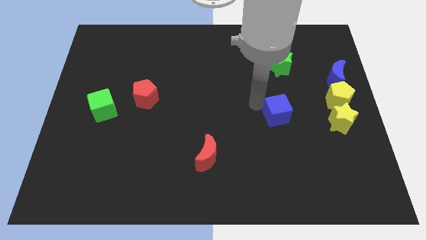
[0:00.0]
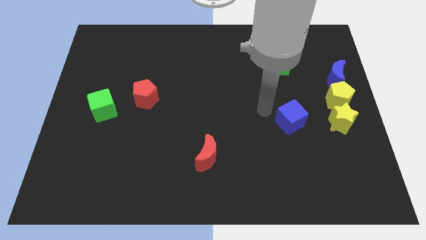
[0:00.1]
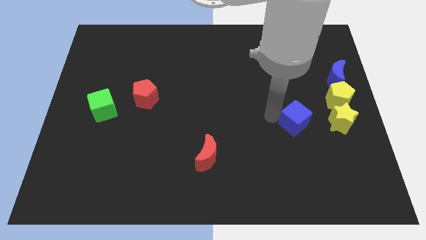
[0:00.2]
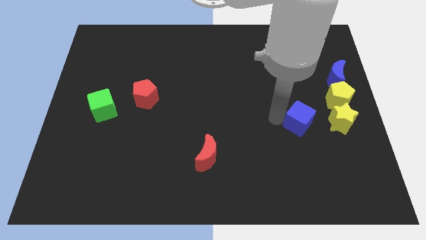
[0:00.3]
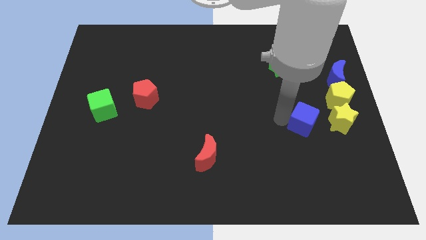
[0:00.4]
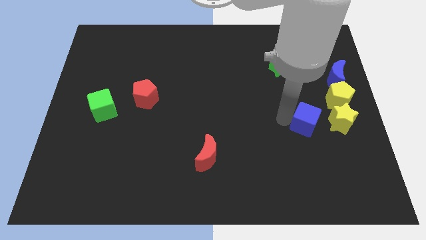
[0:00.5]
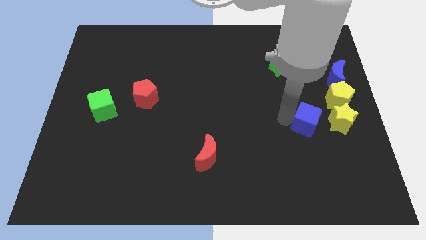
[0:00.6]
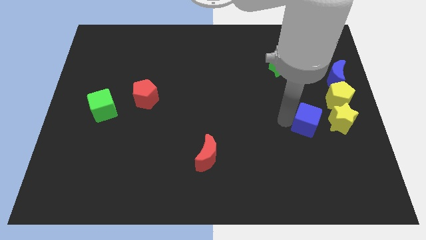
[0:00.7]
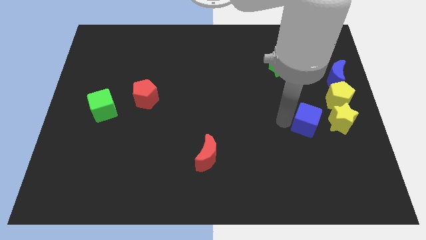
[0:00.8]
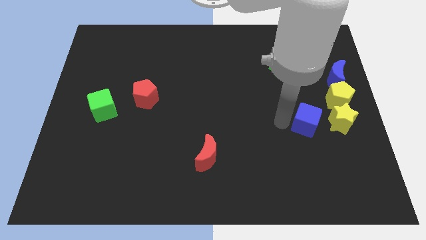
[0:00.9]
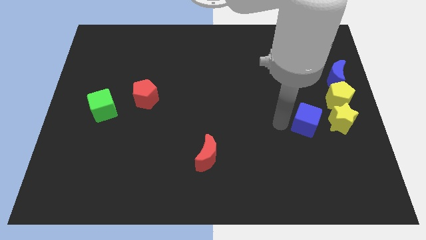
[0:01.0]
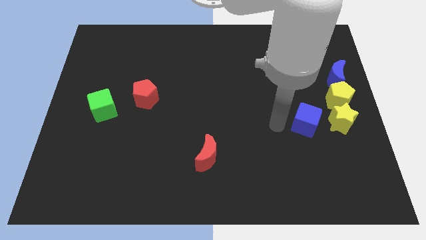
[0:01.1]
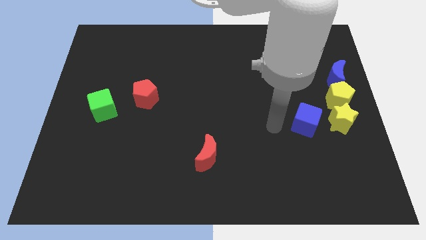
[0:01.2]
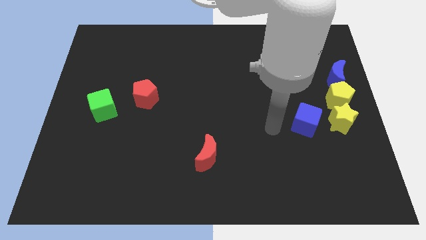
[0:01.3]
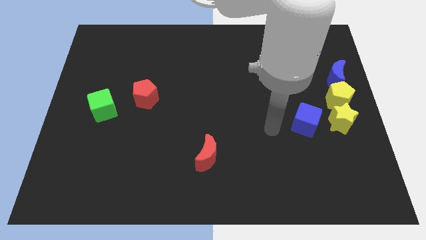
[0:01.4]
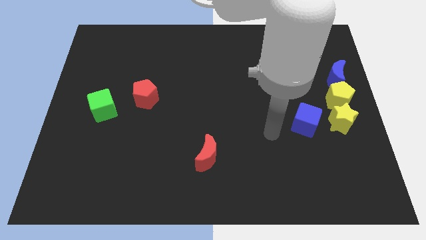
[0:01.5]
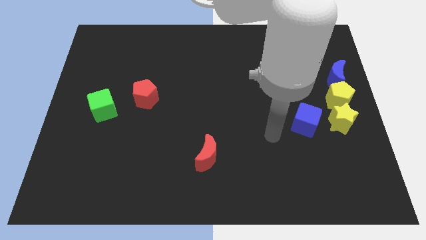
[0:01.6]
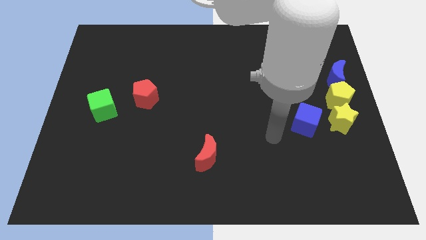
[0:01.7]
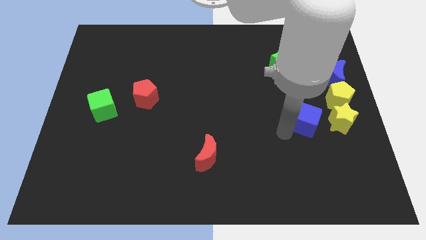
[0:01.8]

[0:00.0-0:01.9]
push the blue cube left to the yellow star

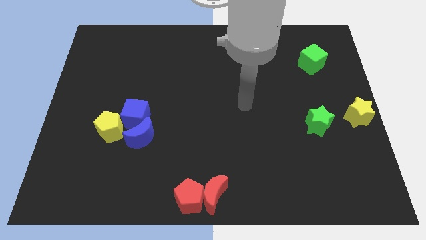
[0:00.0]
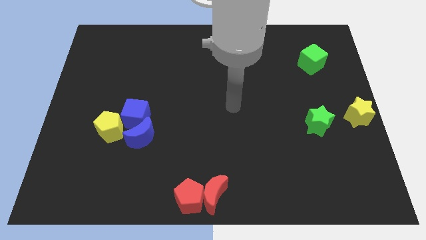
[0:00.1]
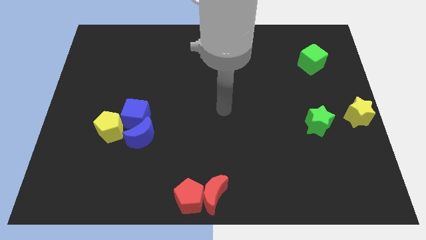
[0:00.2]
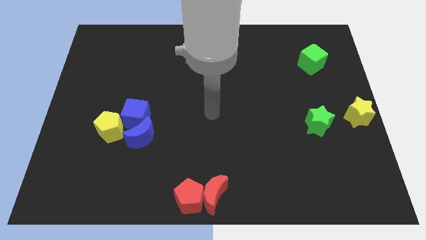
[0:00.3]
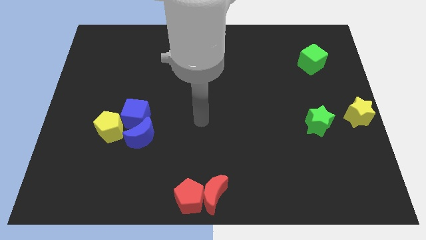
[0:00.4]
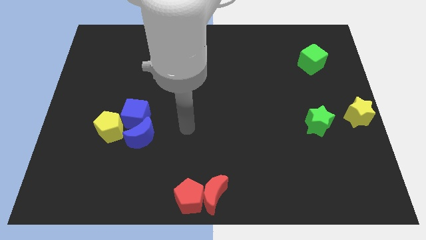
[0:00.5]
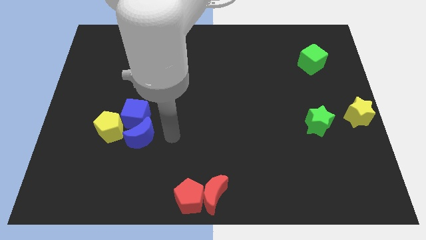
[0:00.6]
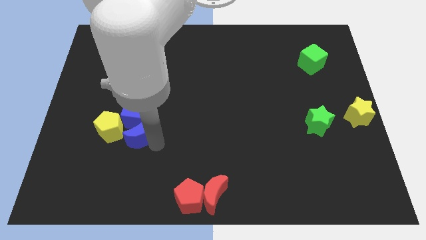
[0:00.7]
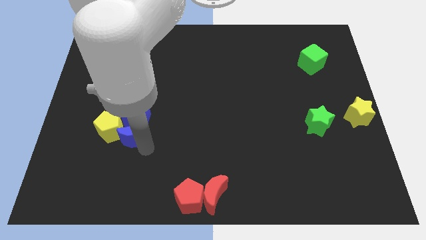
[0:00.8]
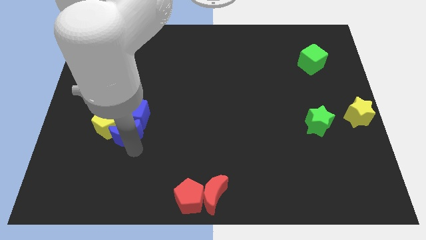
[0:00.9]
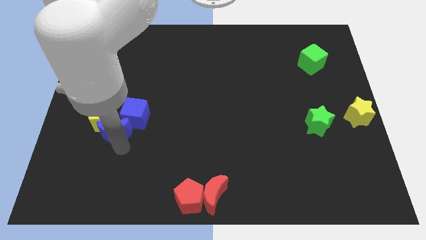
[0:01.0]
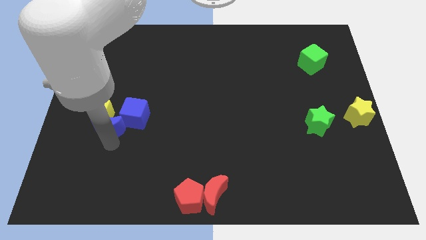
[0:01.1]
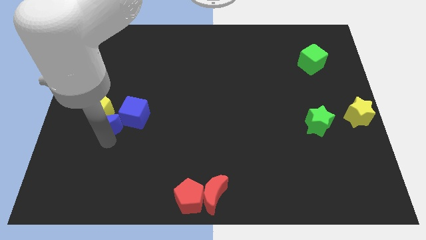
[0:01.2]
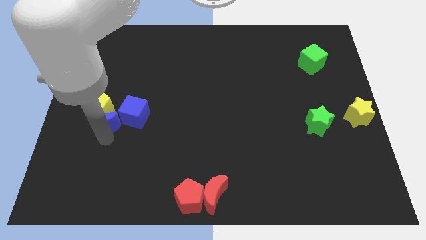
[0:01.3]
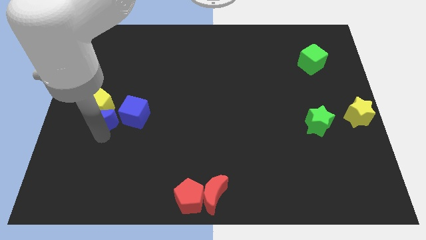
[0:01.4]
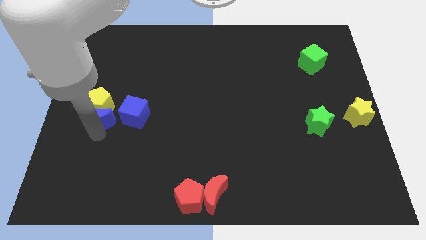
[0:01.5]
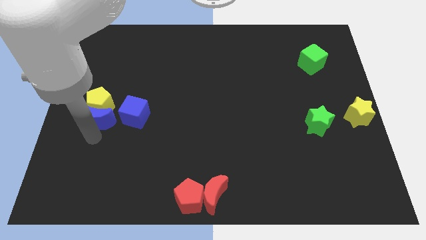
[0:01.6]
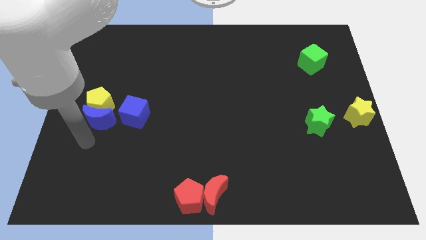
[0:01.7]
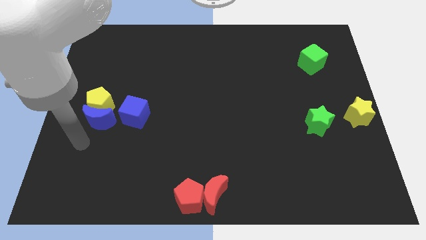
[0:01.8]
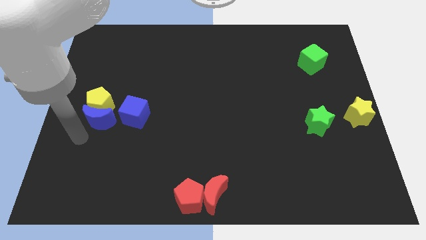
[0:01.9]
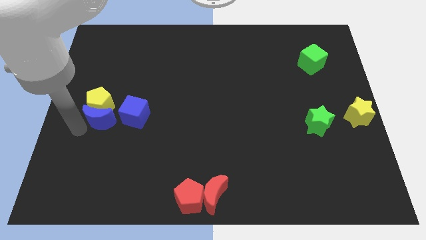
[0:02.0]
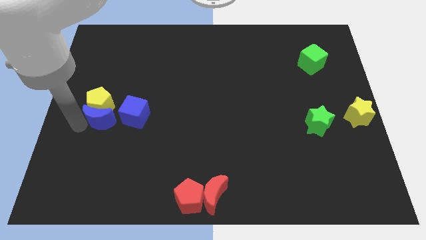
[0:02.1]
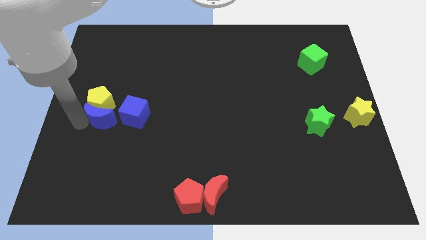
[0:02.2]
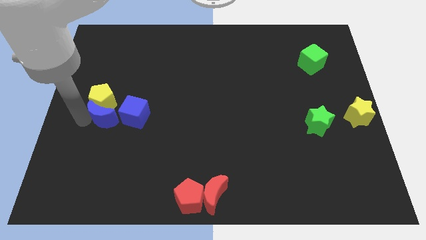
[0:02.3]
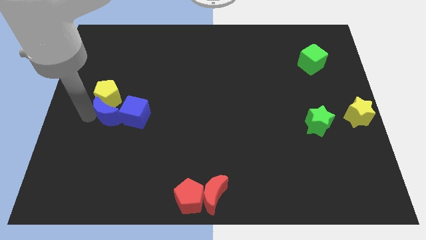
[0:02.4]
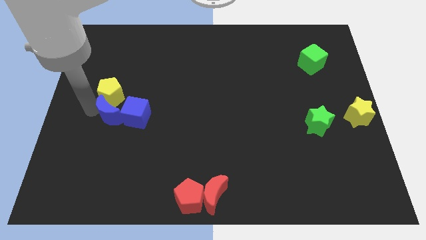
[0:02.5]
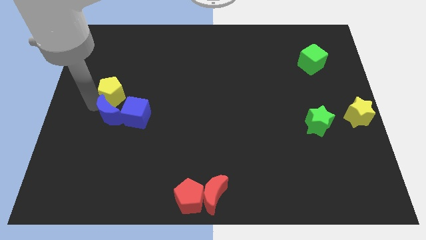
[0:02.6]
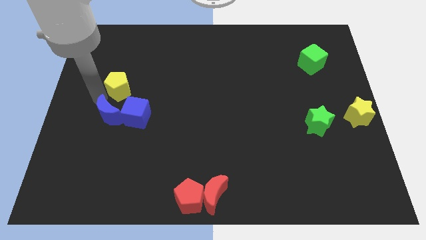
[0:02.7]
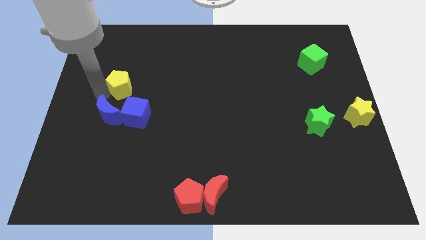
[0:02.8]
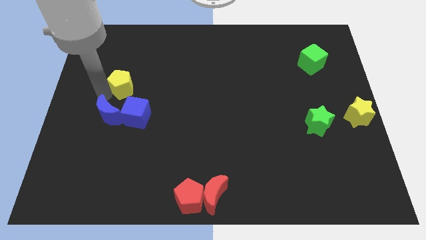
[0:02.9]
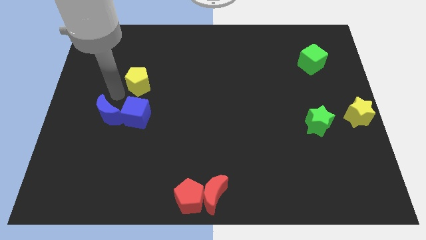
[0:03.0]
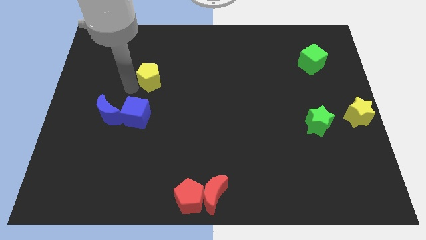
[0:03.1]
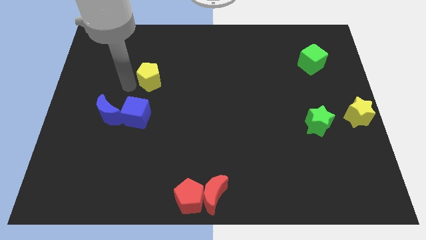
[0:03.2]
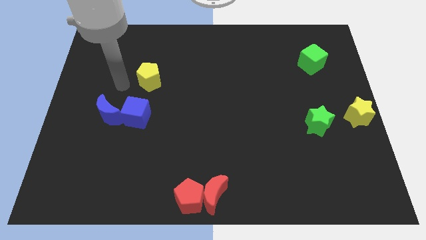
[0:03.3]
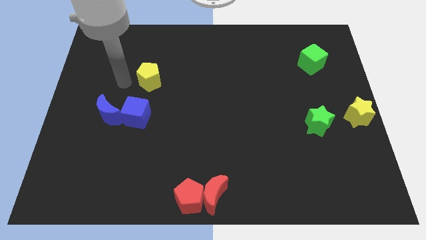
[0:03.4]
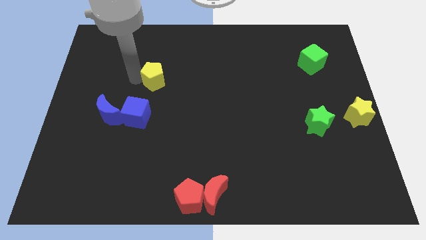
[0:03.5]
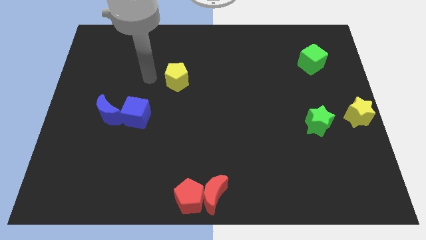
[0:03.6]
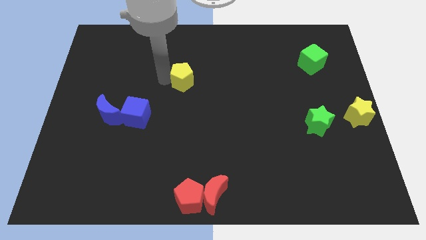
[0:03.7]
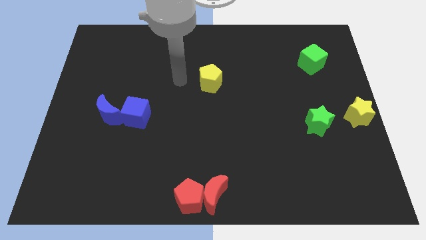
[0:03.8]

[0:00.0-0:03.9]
push the yellow pentagon to the top of the blue cube

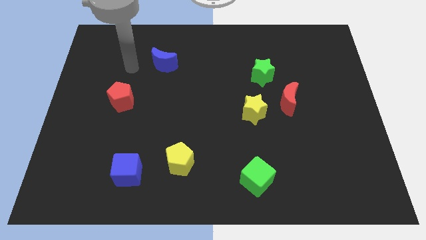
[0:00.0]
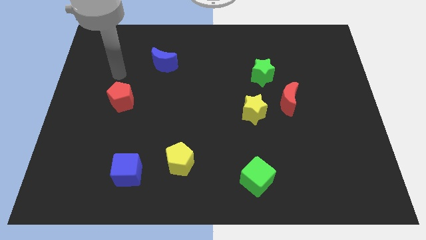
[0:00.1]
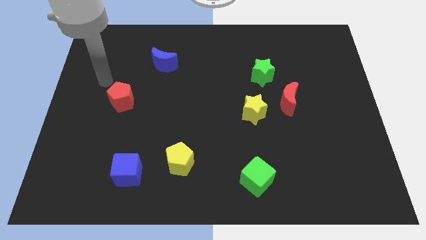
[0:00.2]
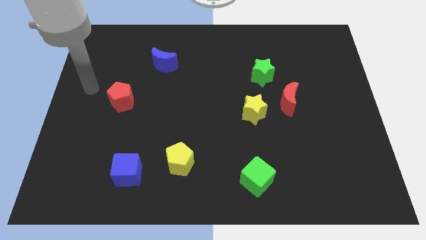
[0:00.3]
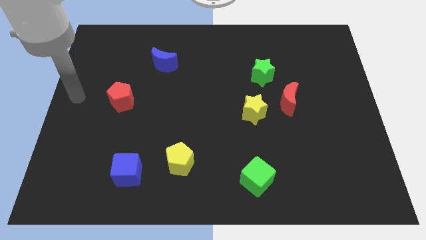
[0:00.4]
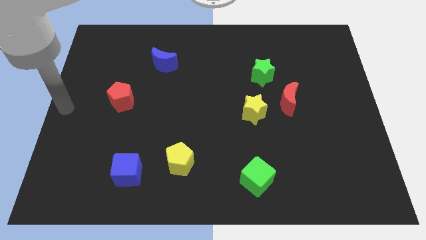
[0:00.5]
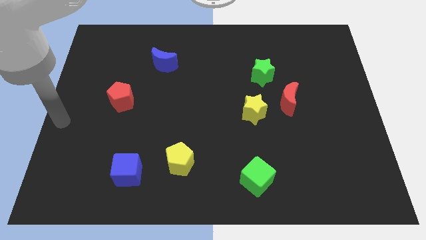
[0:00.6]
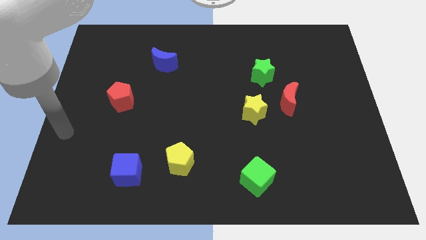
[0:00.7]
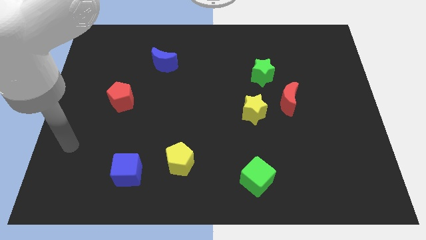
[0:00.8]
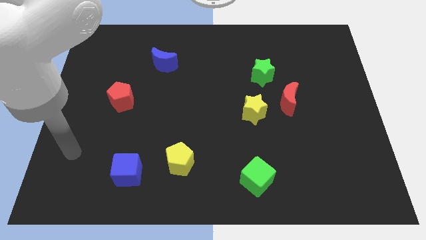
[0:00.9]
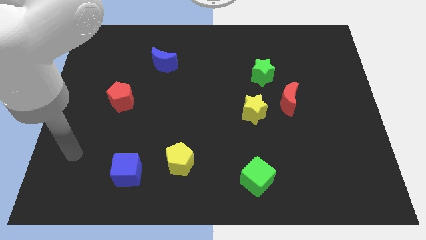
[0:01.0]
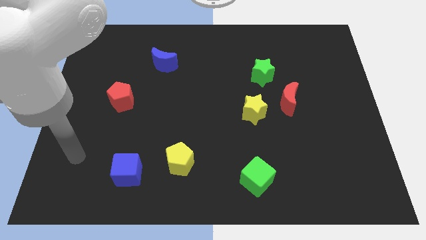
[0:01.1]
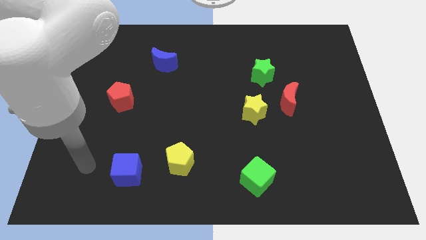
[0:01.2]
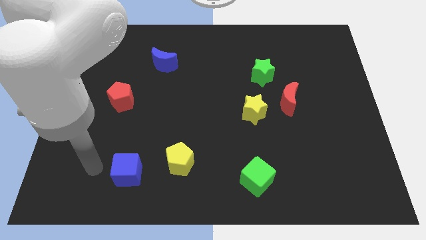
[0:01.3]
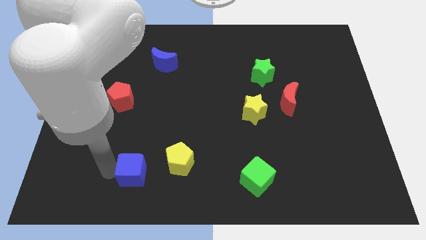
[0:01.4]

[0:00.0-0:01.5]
move the arm to the left side of the blue cube

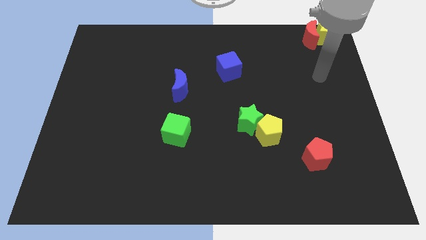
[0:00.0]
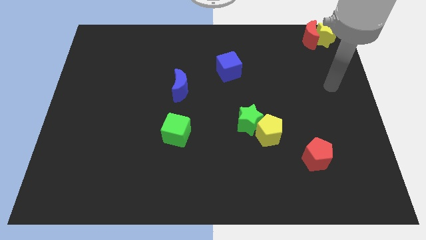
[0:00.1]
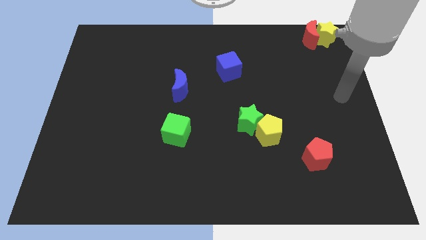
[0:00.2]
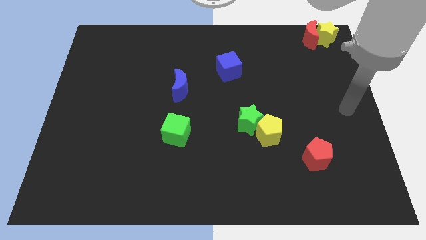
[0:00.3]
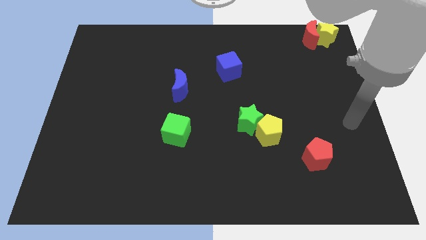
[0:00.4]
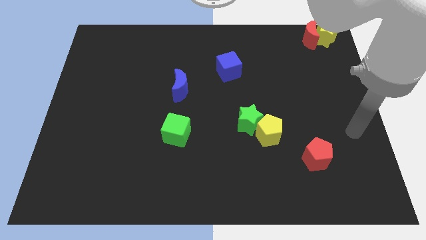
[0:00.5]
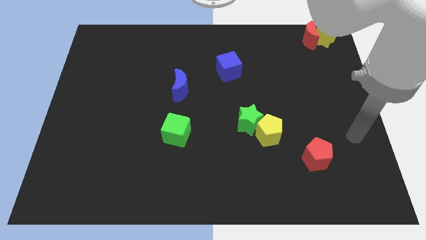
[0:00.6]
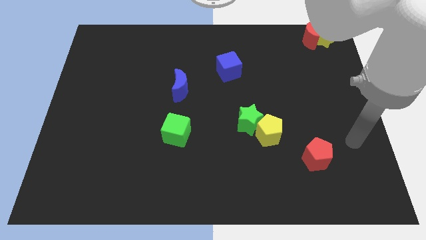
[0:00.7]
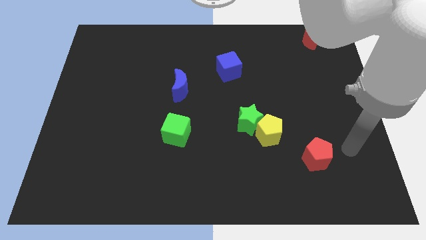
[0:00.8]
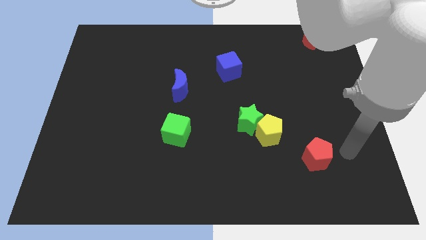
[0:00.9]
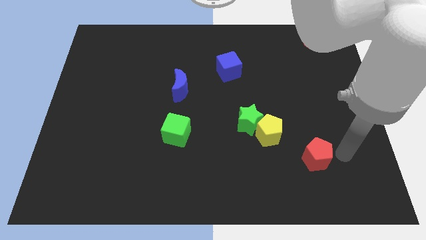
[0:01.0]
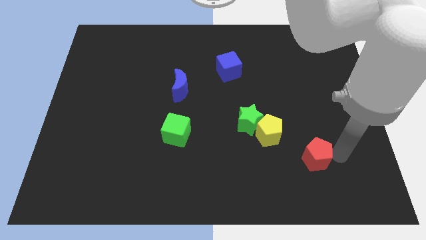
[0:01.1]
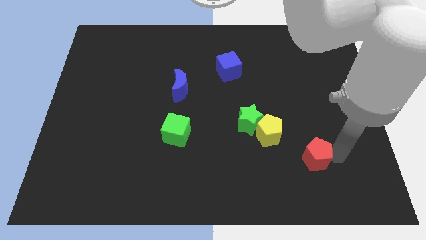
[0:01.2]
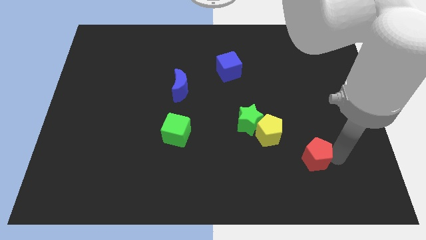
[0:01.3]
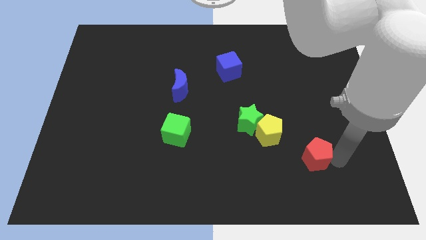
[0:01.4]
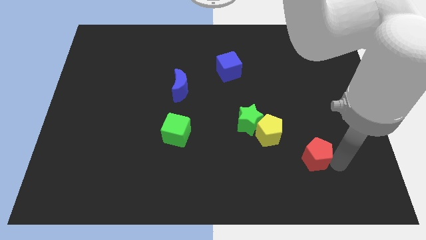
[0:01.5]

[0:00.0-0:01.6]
point your arm right to red pentagon
